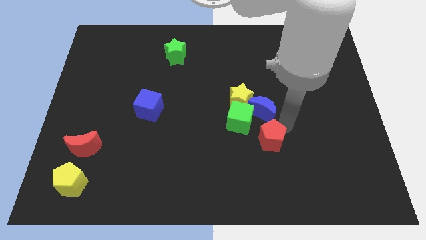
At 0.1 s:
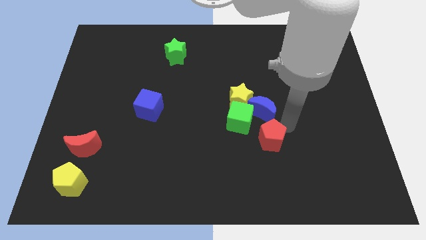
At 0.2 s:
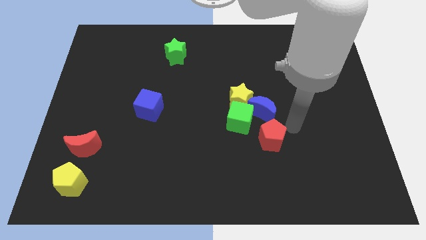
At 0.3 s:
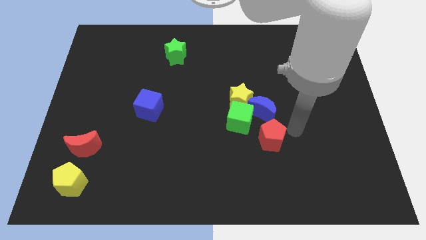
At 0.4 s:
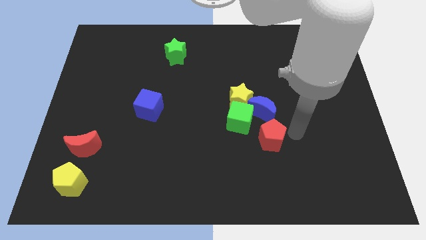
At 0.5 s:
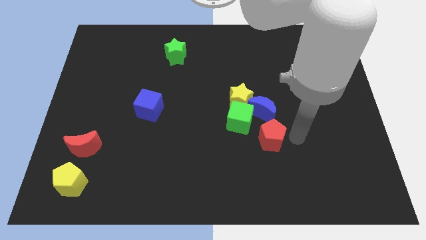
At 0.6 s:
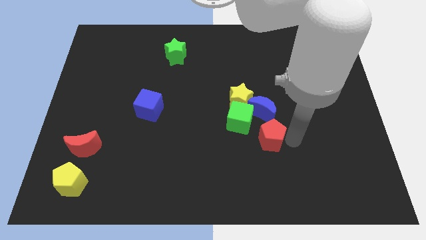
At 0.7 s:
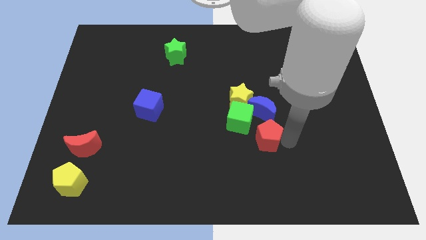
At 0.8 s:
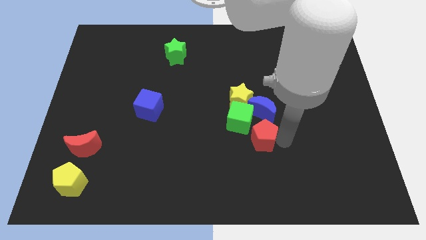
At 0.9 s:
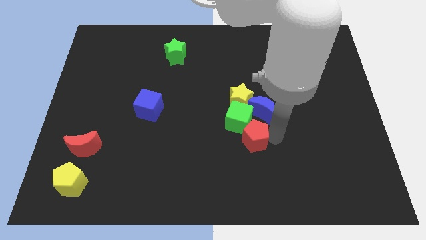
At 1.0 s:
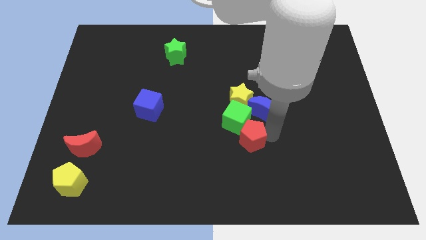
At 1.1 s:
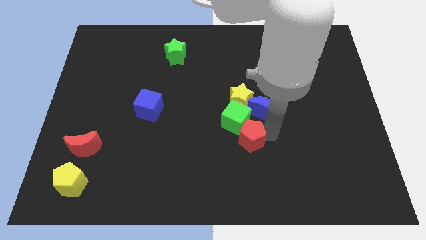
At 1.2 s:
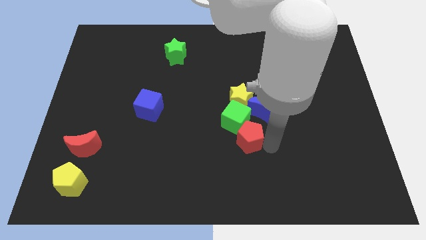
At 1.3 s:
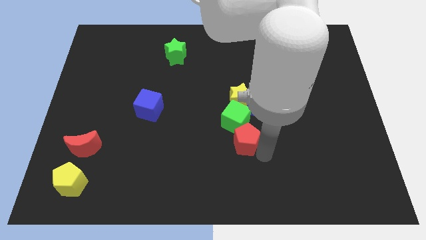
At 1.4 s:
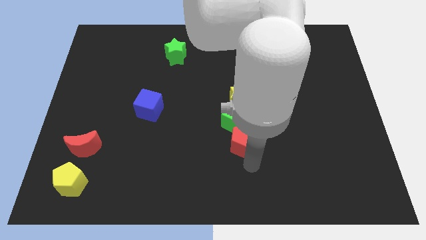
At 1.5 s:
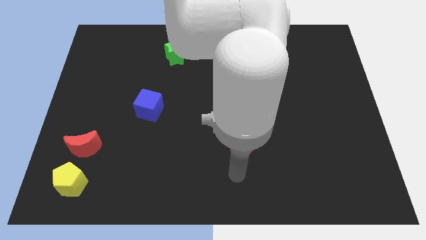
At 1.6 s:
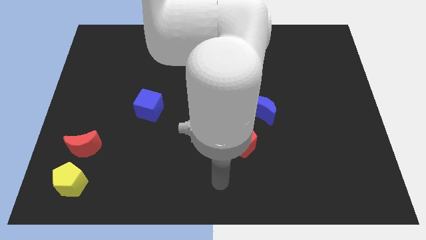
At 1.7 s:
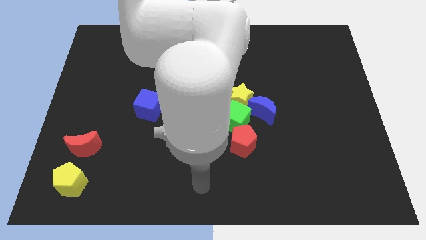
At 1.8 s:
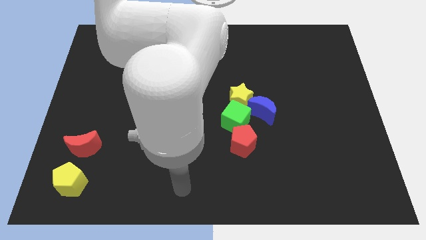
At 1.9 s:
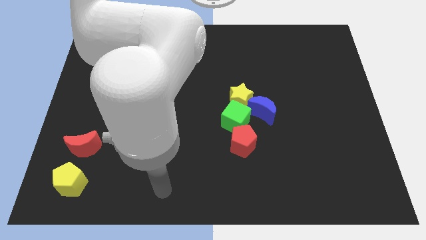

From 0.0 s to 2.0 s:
push the red pentagon into the green cube

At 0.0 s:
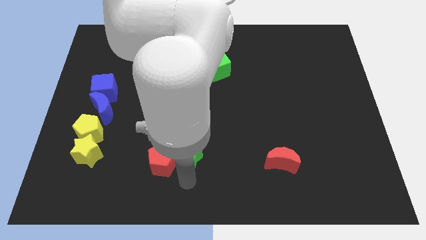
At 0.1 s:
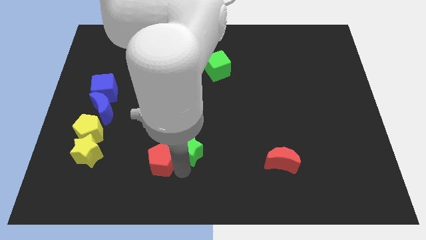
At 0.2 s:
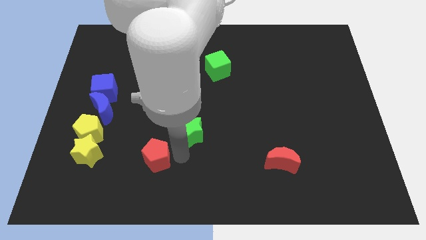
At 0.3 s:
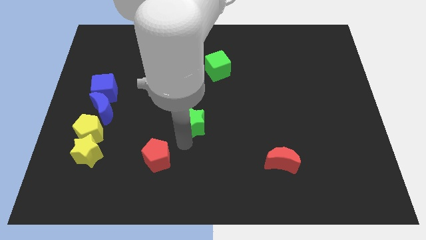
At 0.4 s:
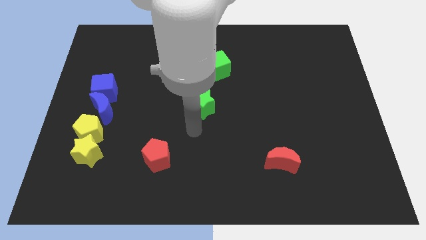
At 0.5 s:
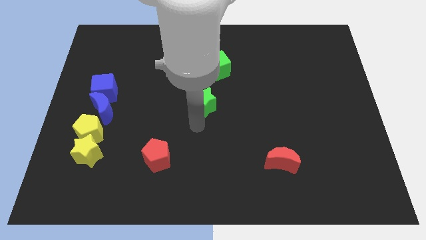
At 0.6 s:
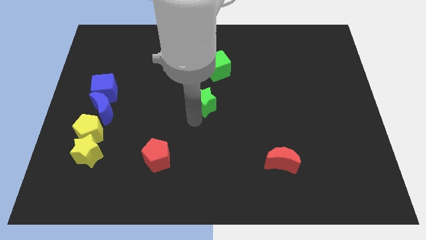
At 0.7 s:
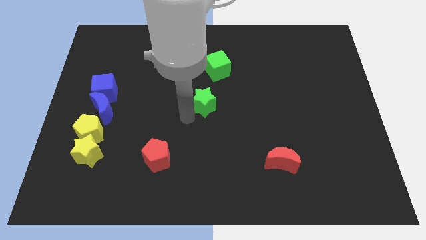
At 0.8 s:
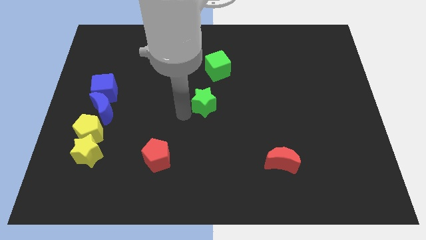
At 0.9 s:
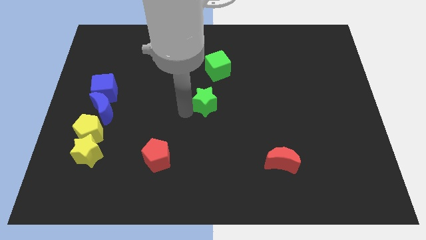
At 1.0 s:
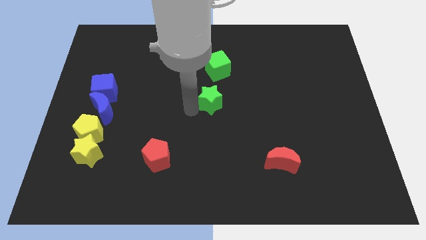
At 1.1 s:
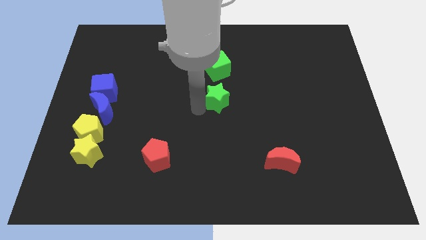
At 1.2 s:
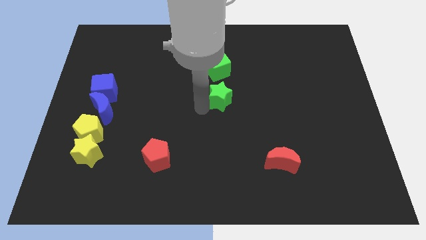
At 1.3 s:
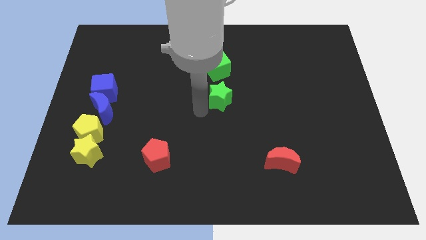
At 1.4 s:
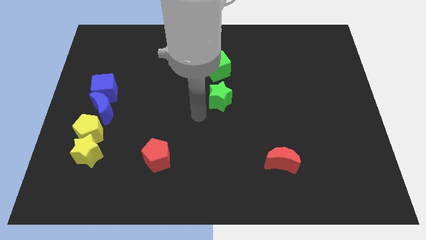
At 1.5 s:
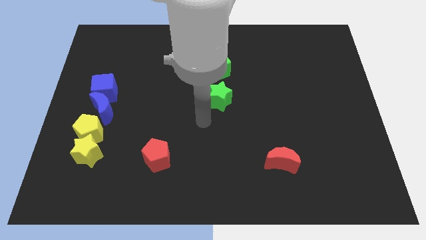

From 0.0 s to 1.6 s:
put the green star below the green cube

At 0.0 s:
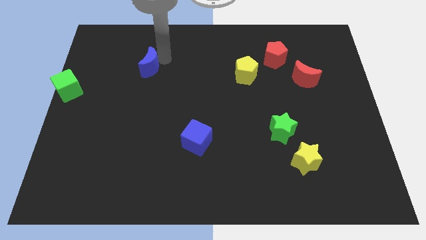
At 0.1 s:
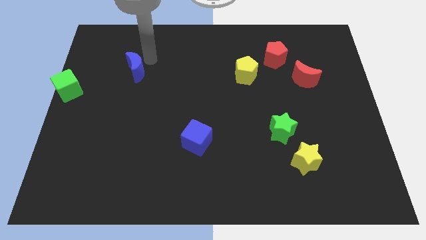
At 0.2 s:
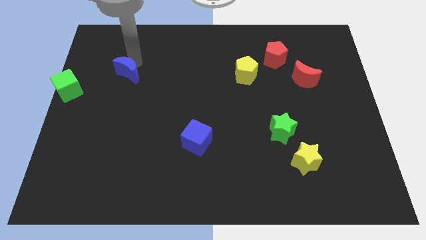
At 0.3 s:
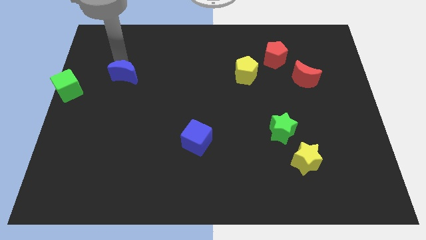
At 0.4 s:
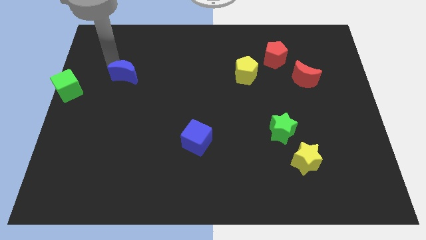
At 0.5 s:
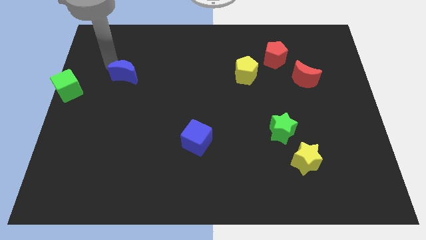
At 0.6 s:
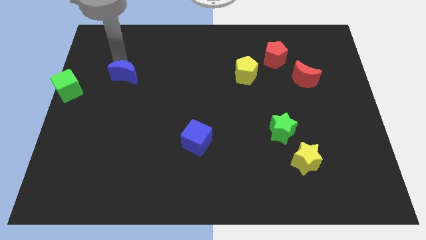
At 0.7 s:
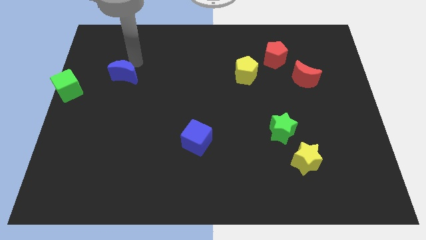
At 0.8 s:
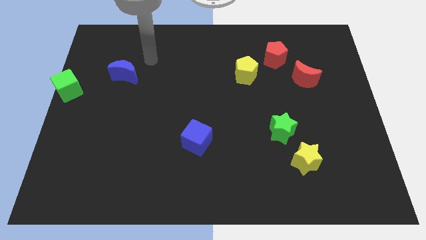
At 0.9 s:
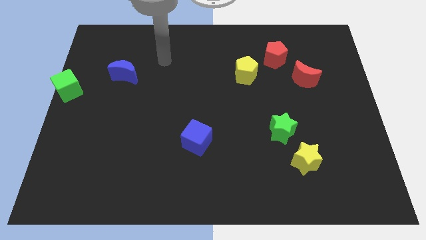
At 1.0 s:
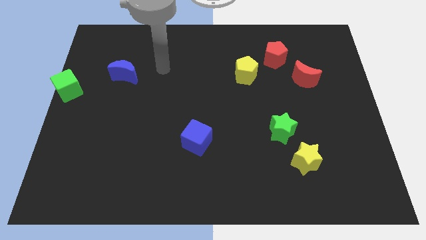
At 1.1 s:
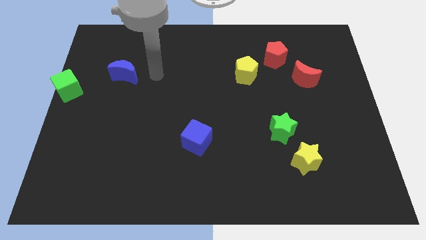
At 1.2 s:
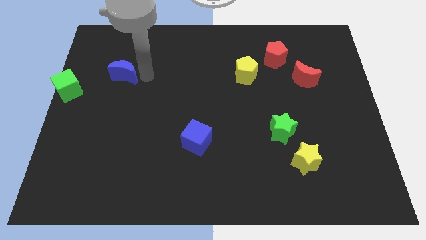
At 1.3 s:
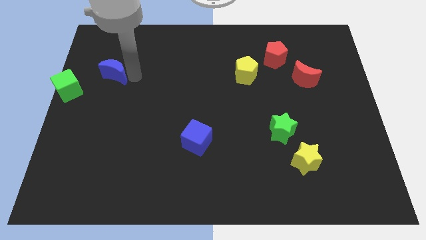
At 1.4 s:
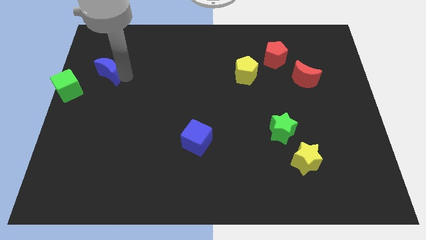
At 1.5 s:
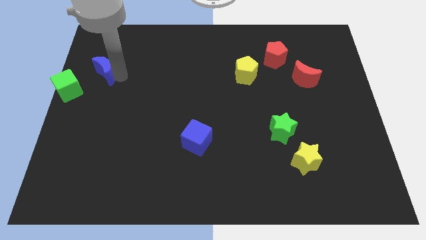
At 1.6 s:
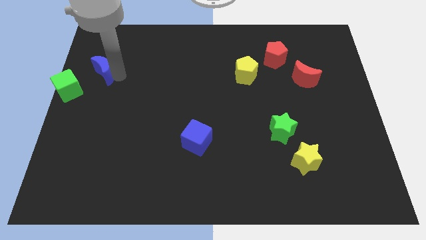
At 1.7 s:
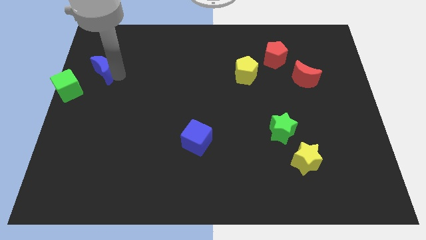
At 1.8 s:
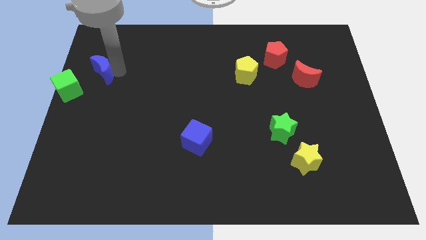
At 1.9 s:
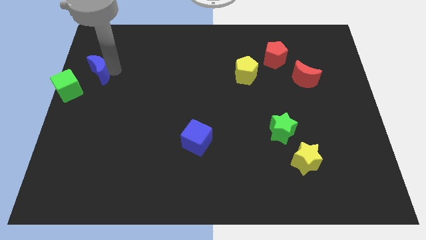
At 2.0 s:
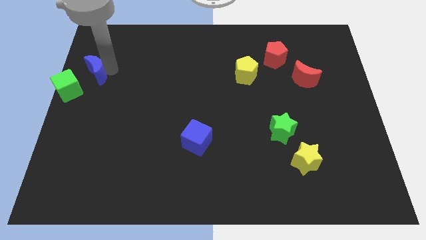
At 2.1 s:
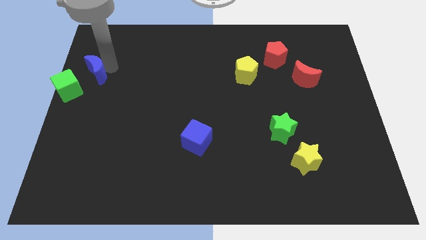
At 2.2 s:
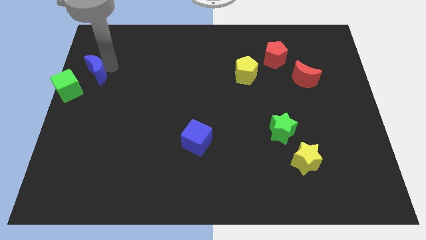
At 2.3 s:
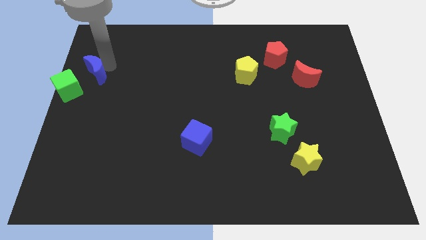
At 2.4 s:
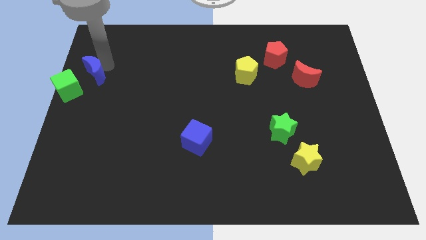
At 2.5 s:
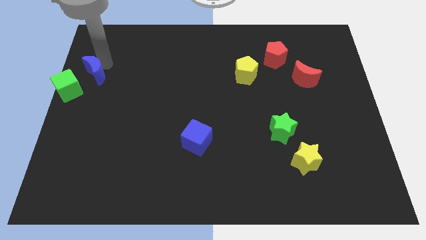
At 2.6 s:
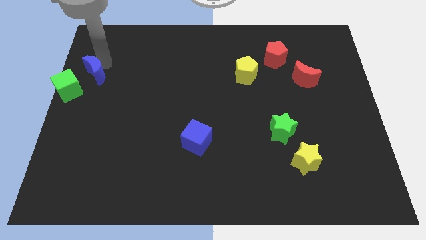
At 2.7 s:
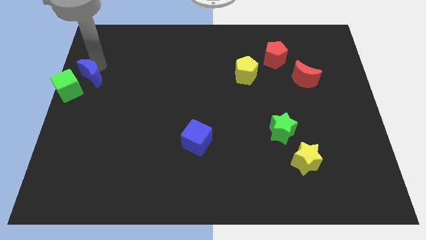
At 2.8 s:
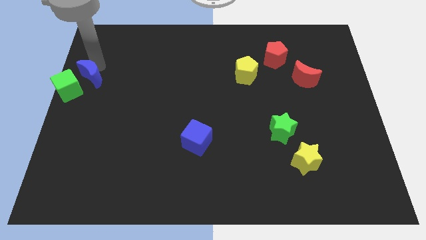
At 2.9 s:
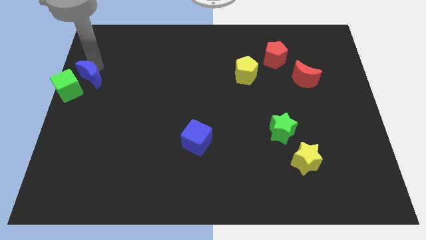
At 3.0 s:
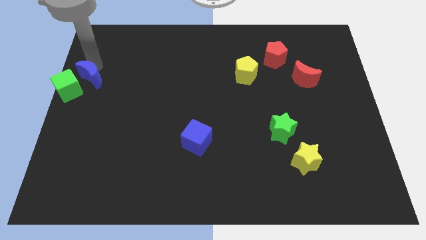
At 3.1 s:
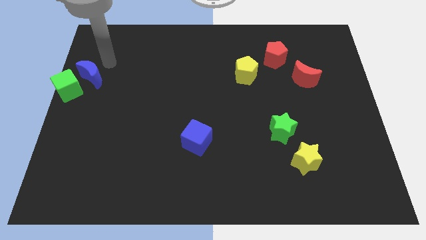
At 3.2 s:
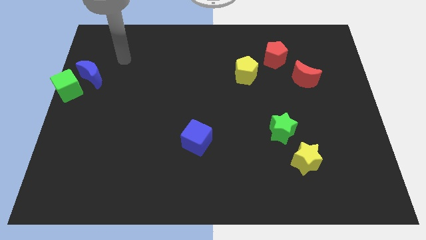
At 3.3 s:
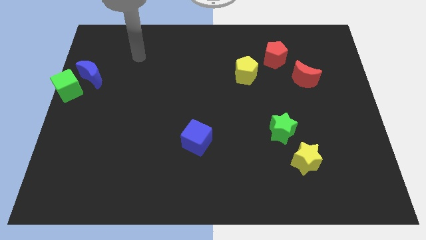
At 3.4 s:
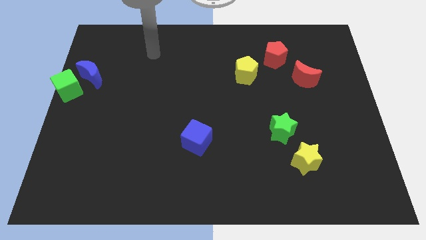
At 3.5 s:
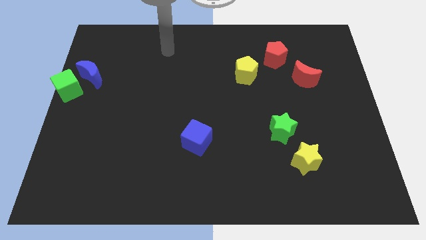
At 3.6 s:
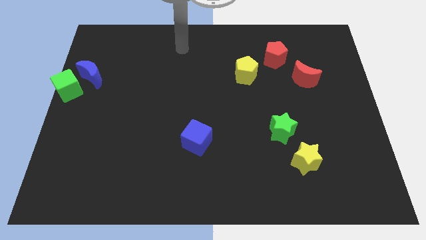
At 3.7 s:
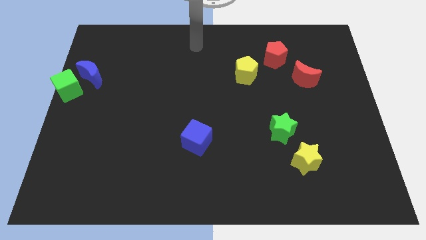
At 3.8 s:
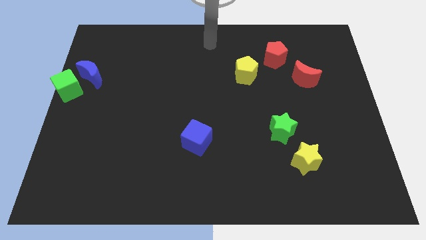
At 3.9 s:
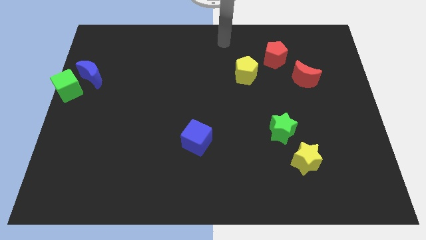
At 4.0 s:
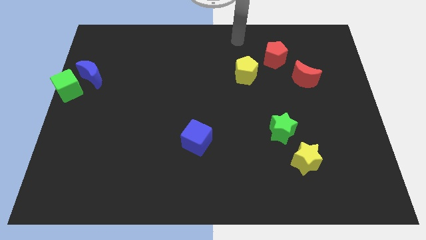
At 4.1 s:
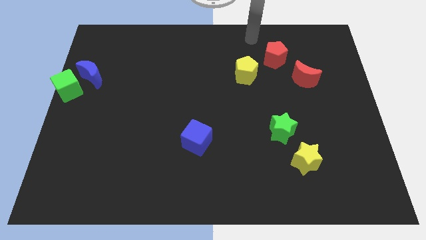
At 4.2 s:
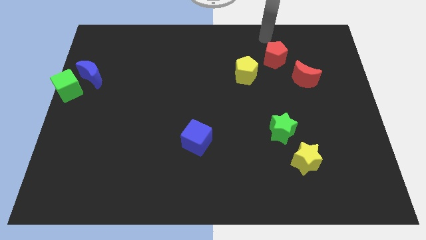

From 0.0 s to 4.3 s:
place the blue moon diagonal to the green cube

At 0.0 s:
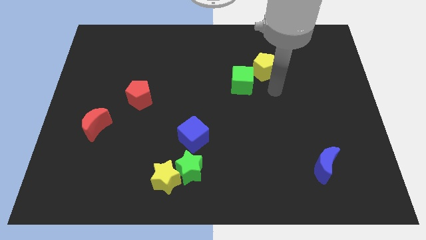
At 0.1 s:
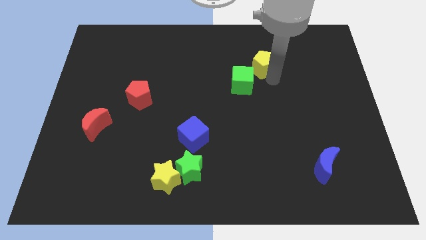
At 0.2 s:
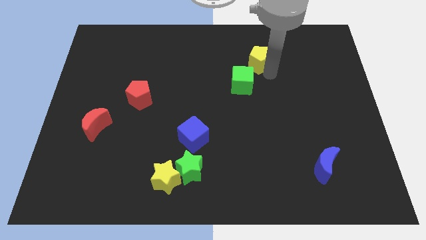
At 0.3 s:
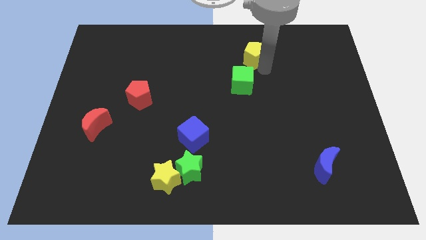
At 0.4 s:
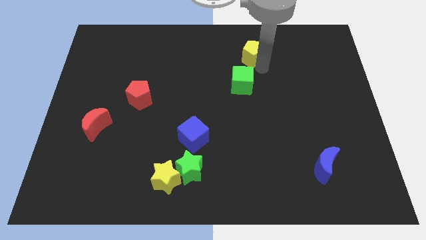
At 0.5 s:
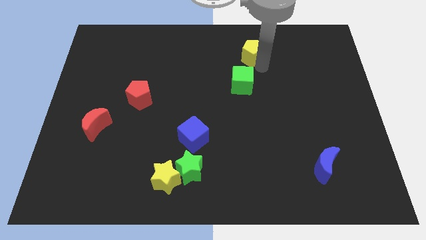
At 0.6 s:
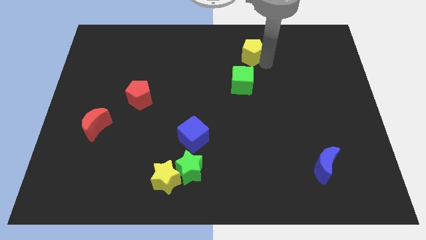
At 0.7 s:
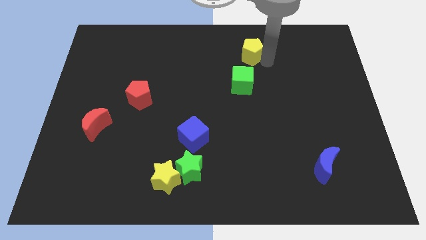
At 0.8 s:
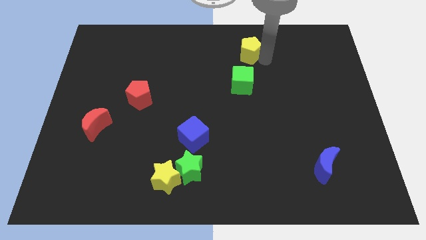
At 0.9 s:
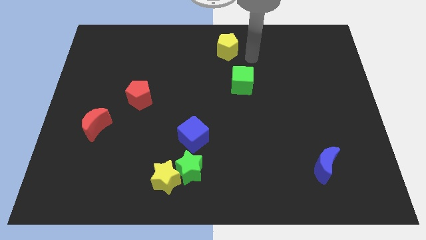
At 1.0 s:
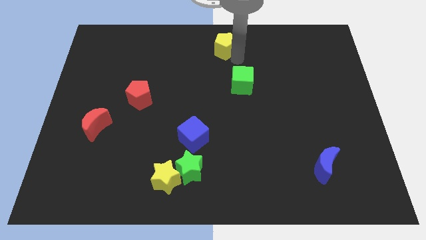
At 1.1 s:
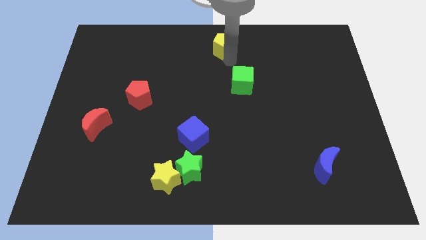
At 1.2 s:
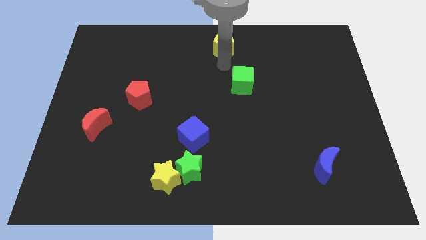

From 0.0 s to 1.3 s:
place the yellow pentagon diagonally to red pentagon
